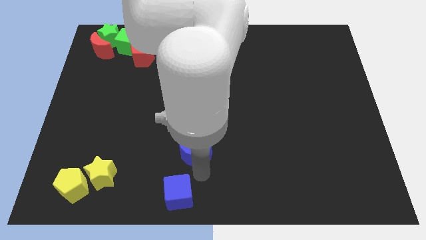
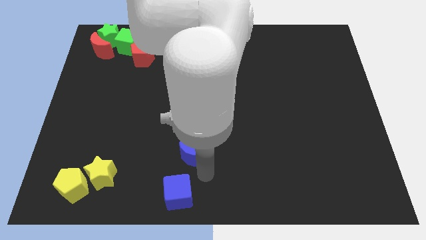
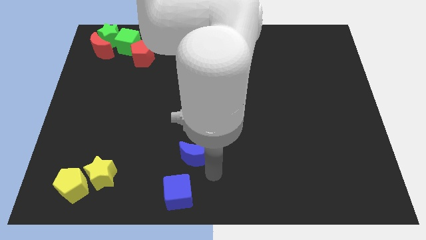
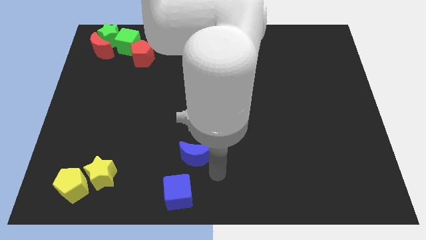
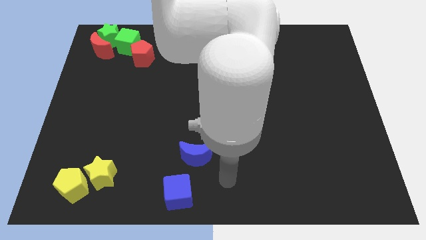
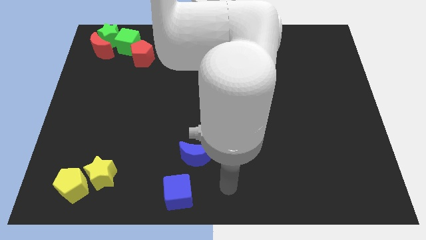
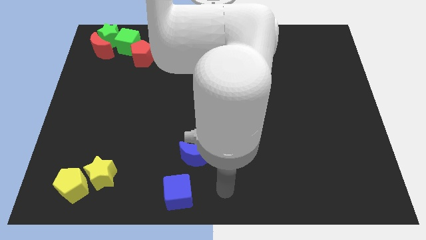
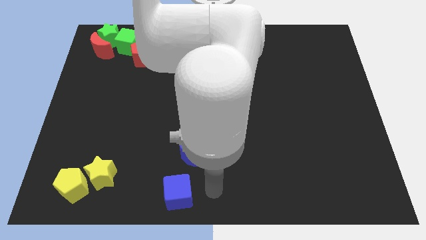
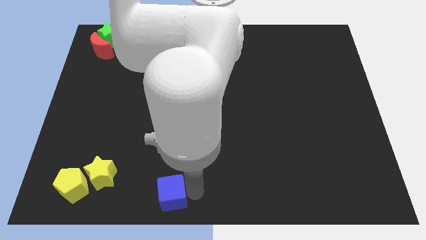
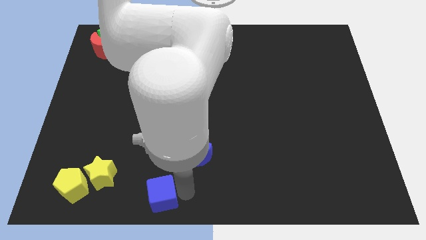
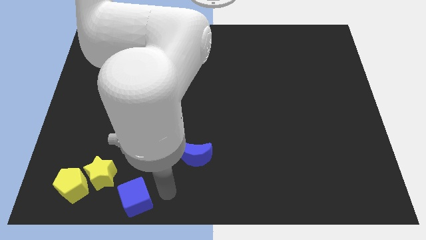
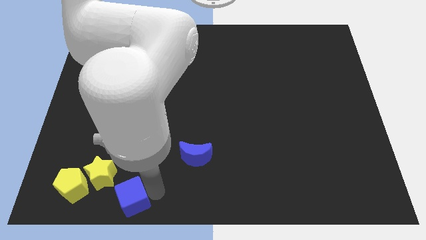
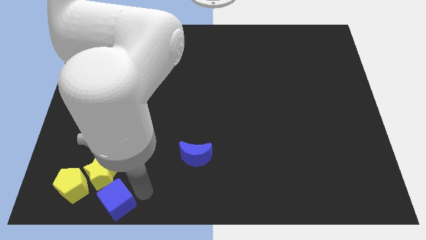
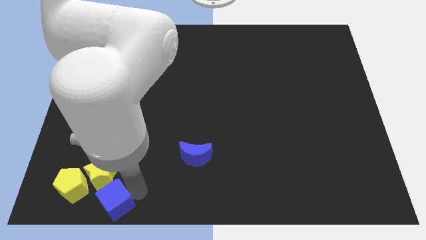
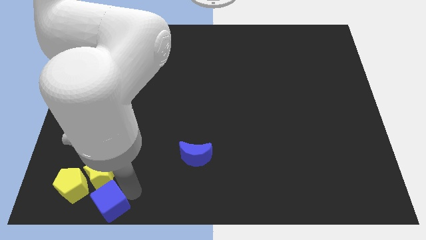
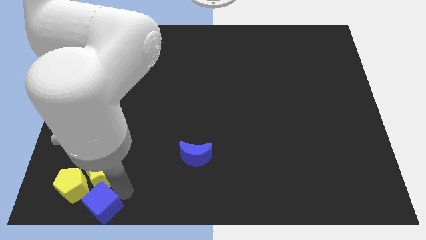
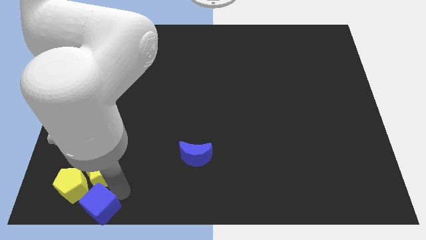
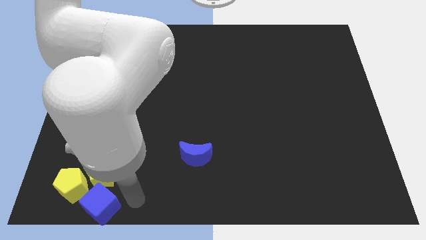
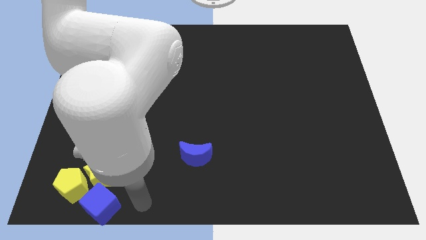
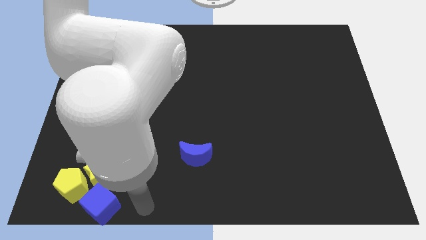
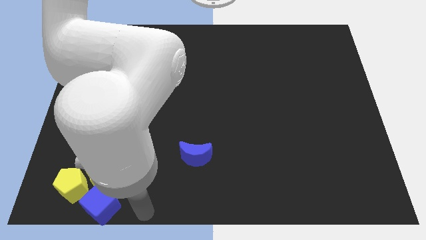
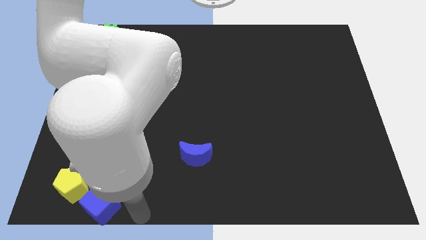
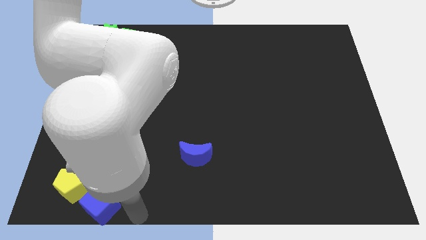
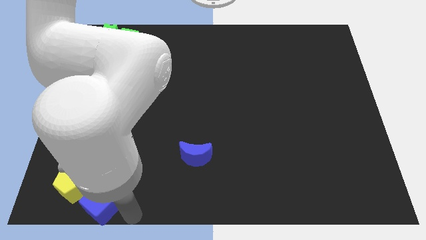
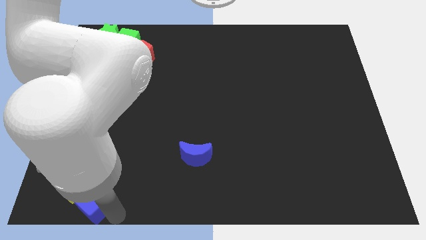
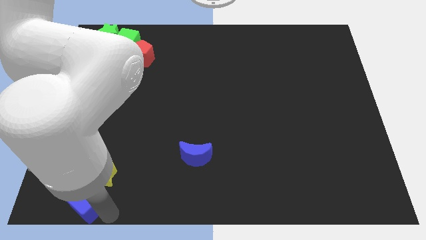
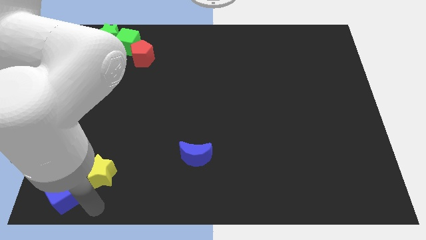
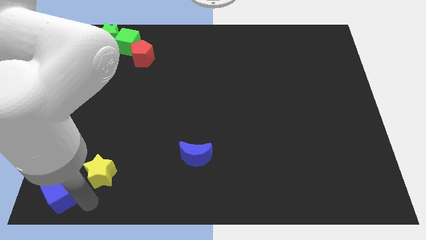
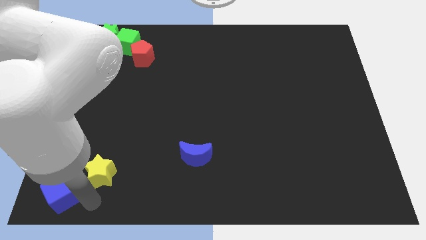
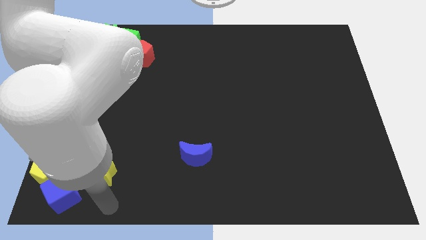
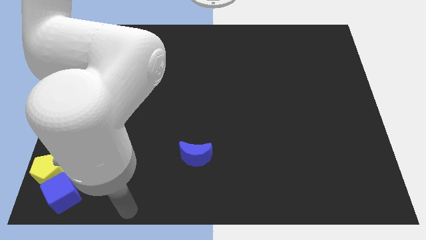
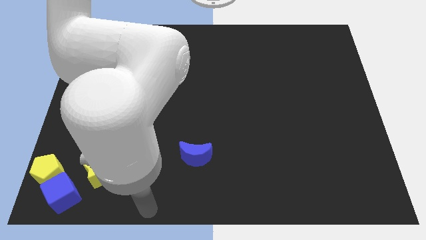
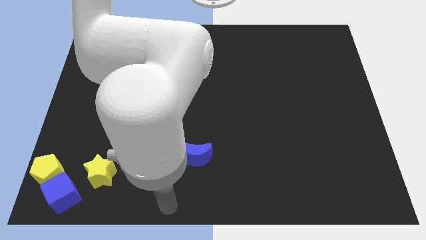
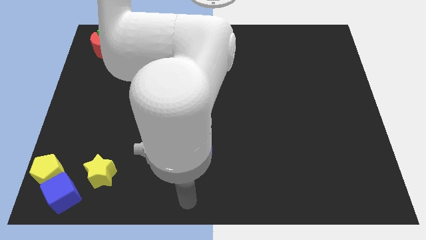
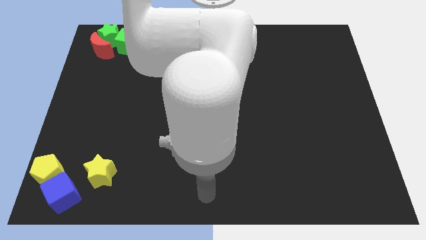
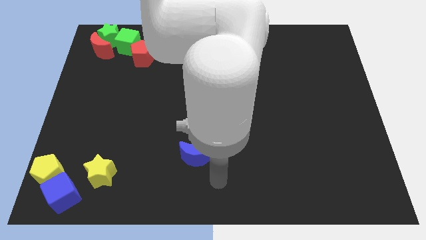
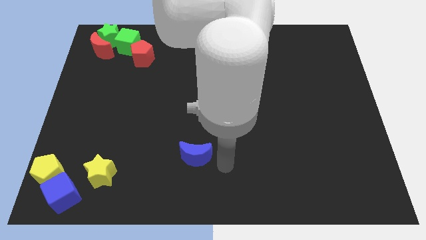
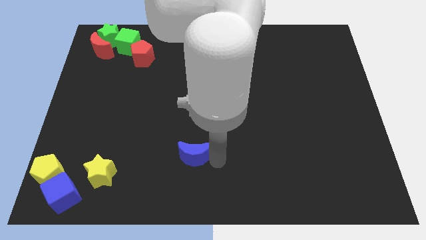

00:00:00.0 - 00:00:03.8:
move the blue cube into the yellow pentagon

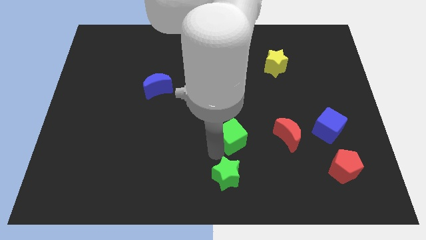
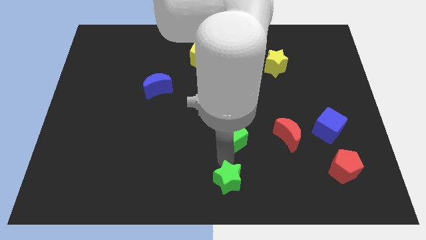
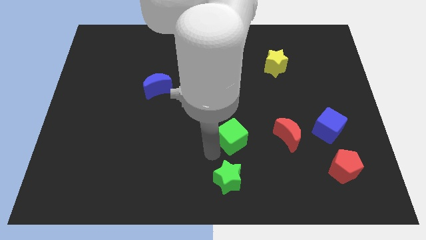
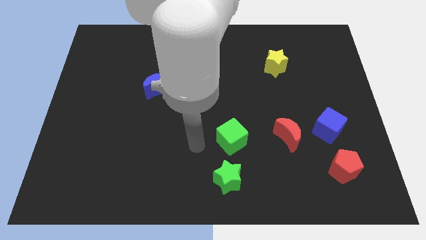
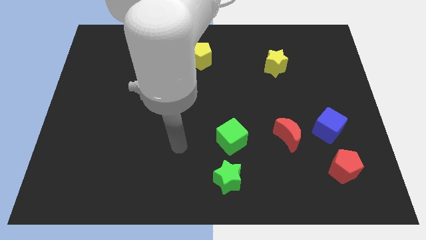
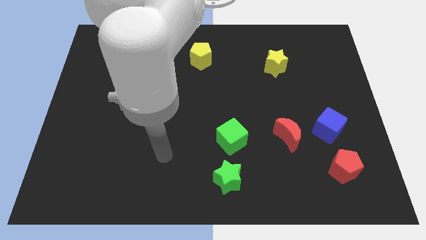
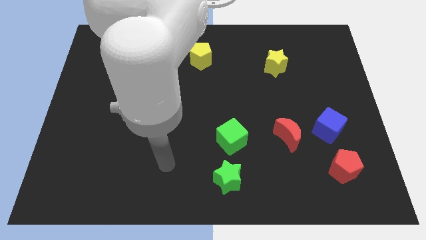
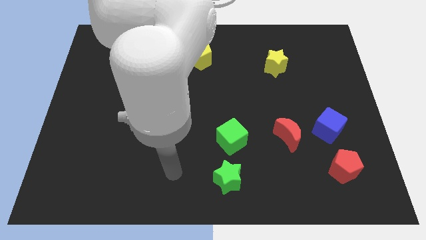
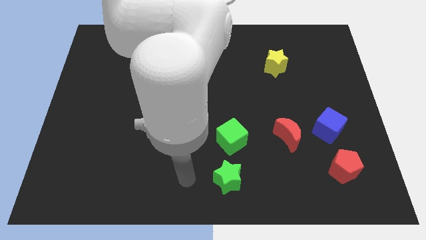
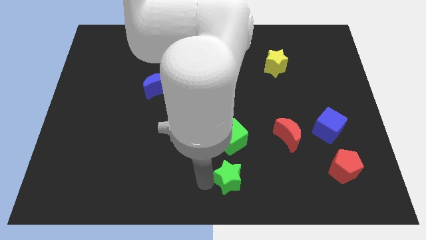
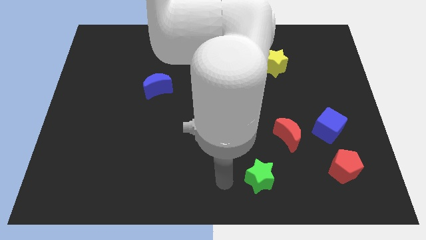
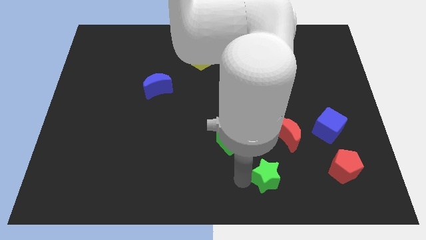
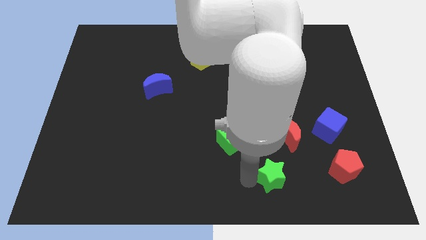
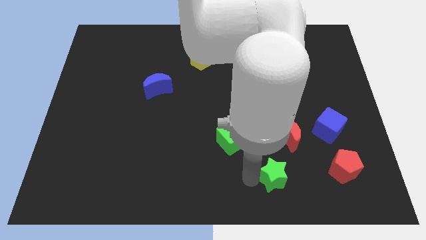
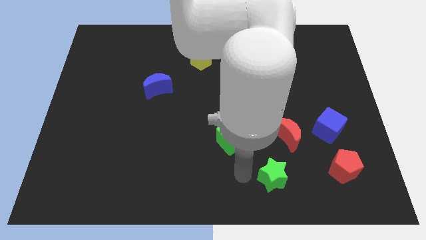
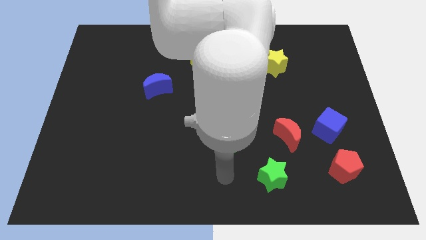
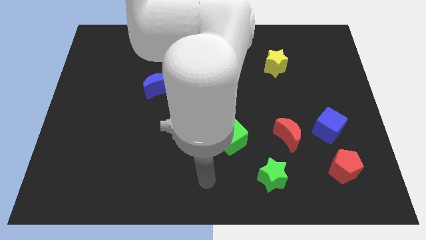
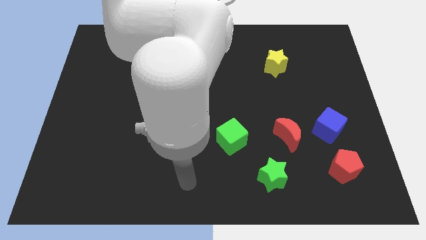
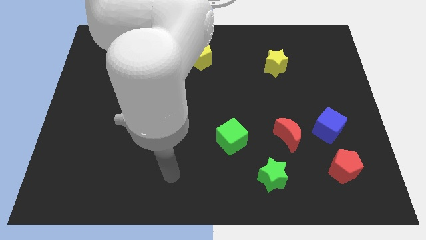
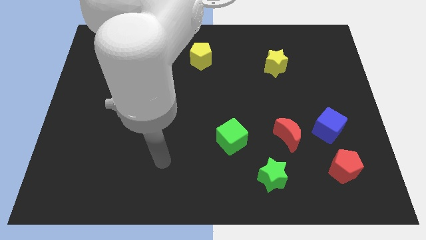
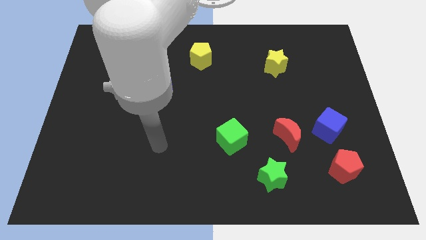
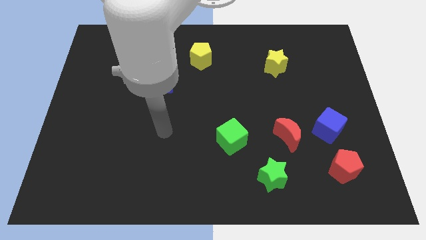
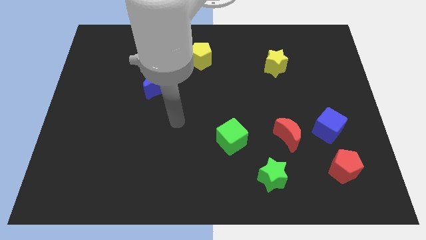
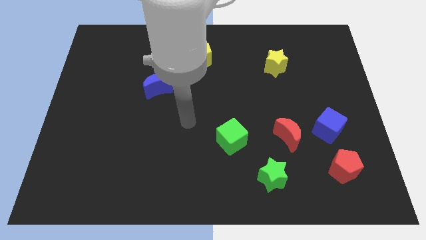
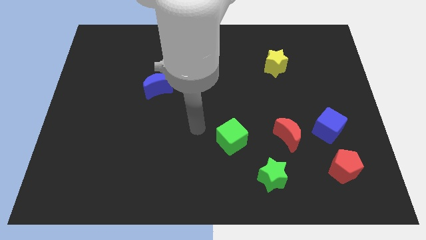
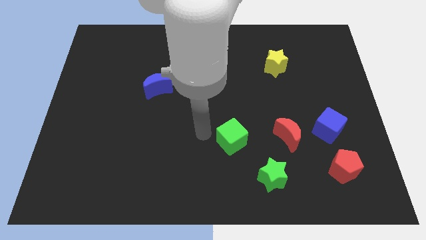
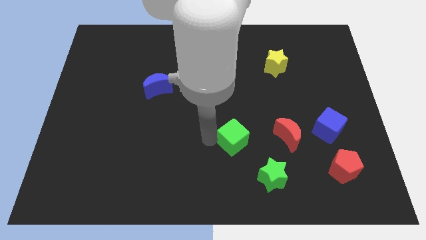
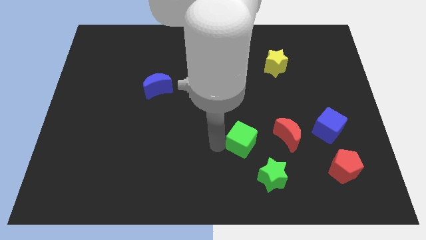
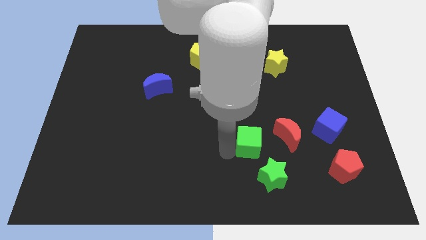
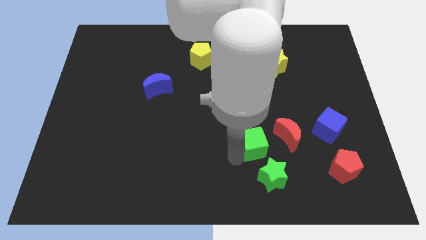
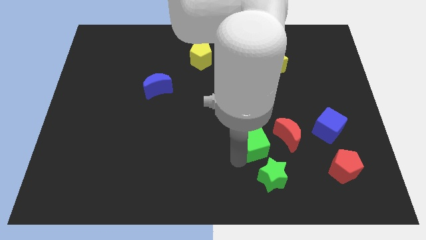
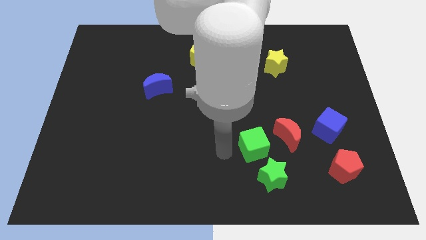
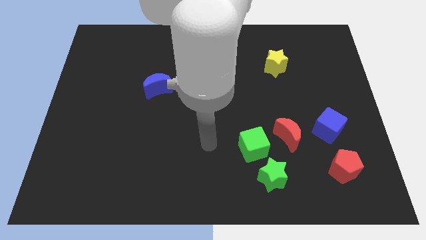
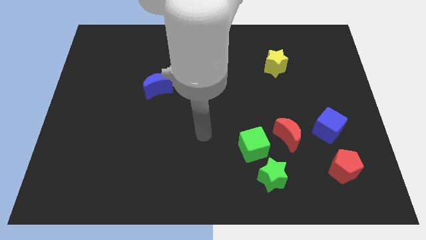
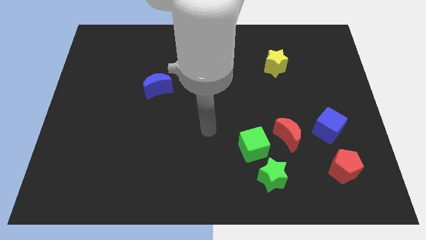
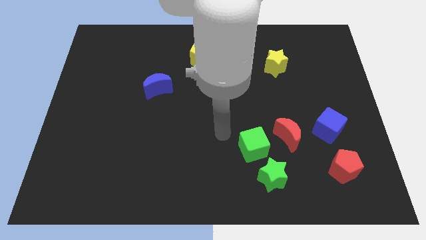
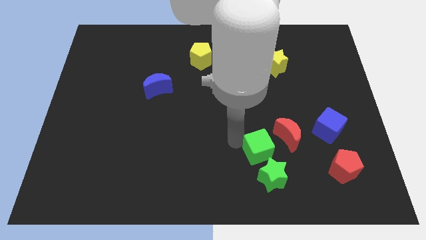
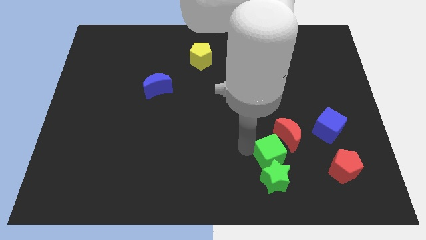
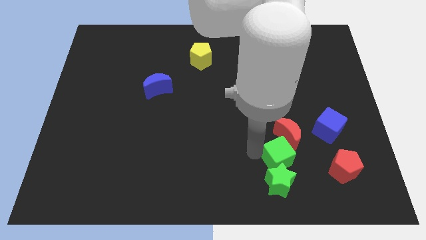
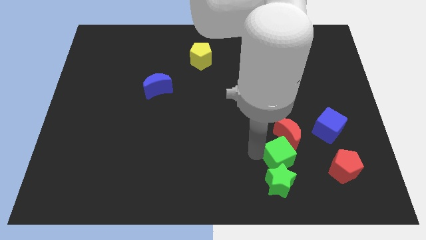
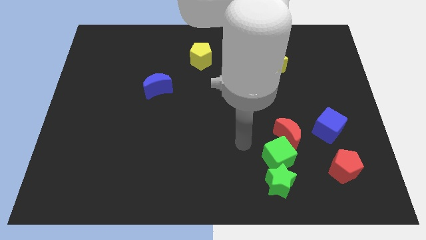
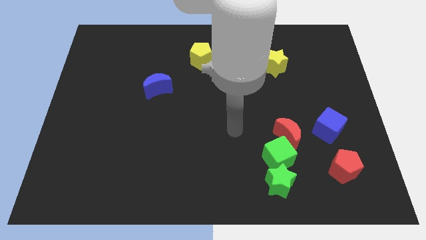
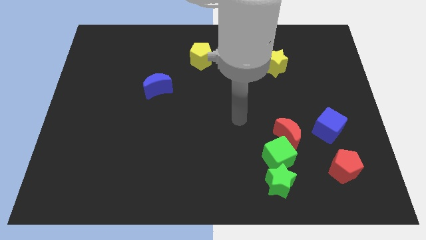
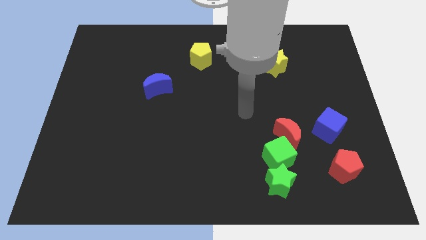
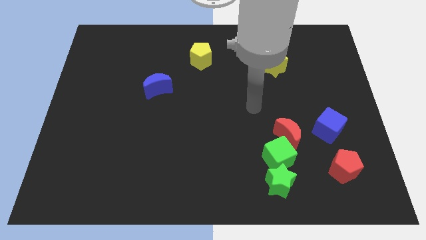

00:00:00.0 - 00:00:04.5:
place the green blocks below the red crescent

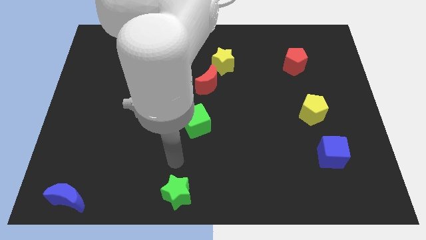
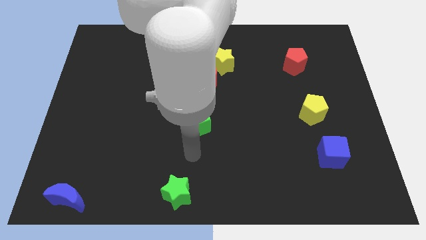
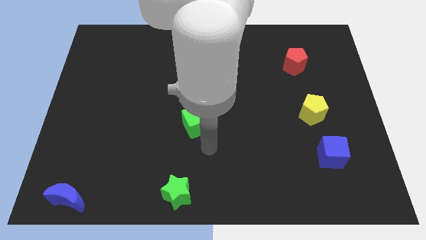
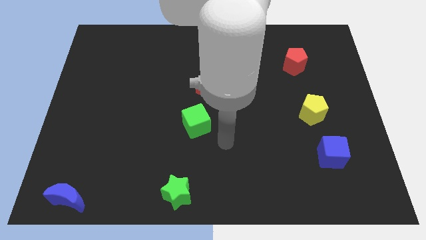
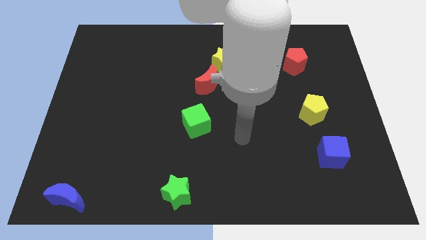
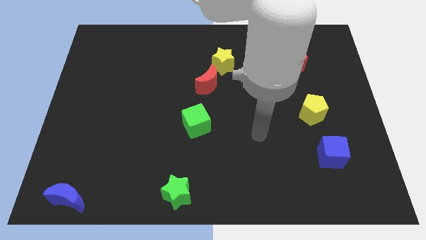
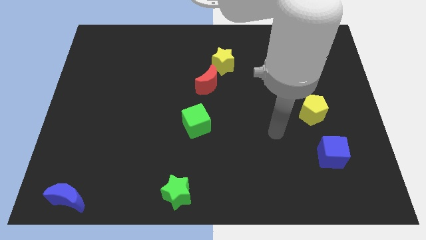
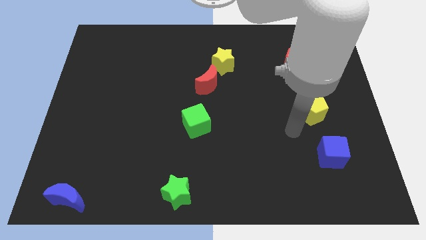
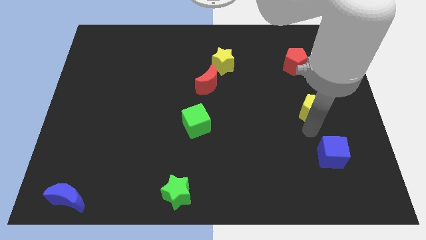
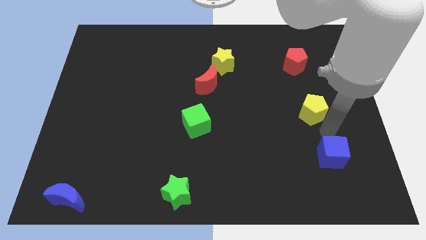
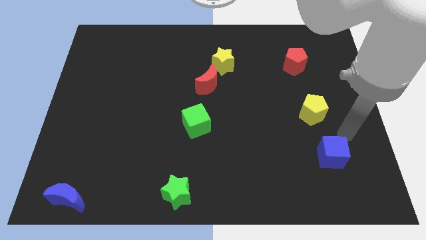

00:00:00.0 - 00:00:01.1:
place the arm above the blue cube
